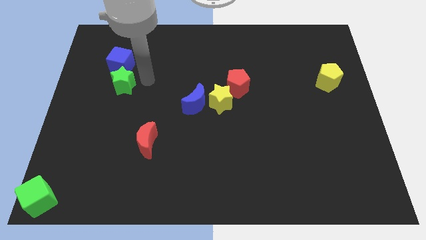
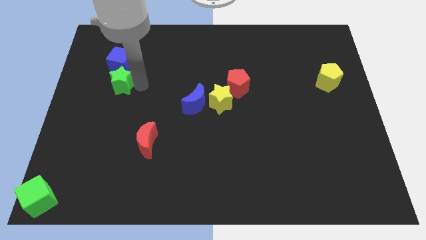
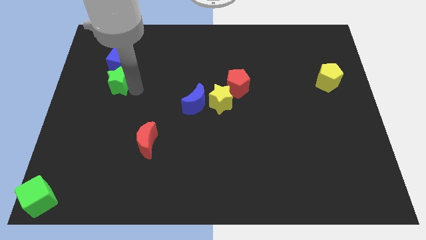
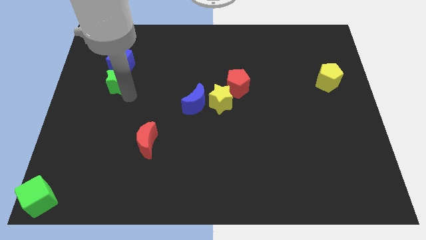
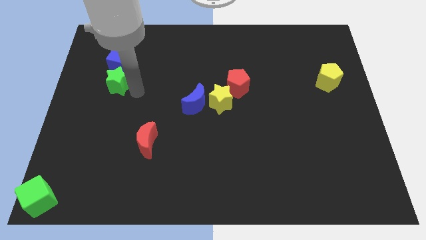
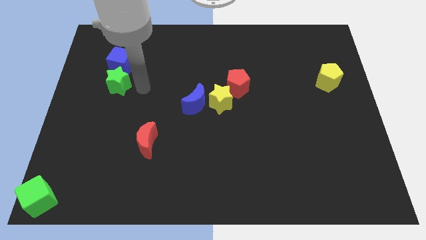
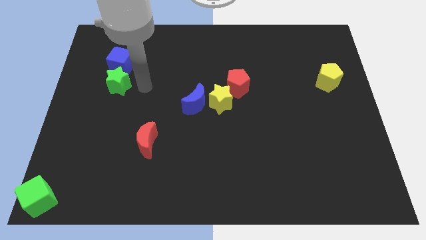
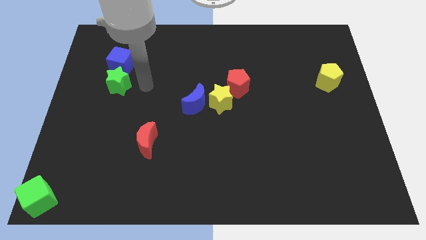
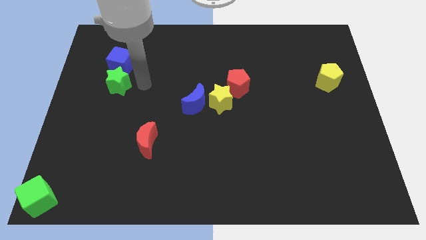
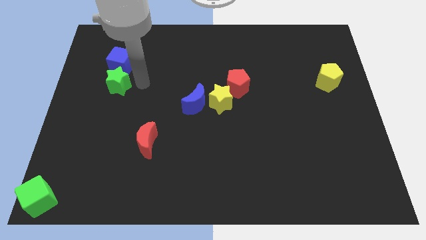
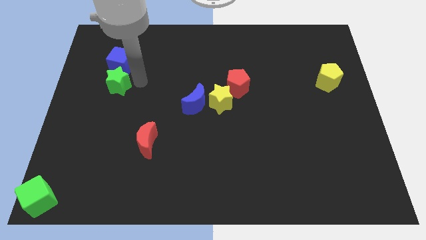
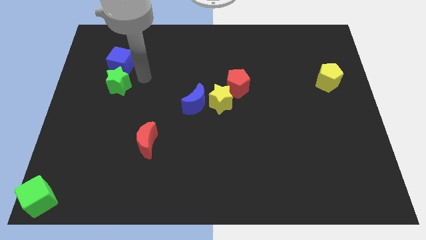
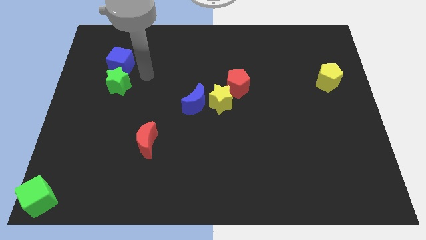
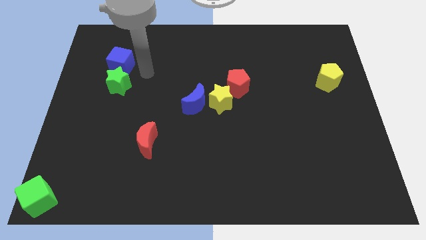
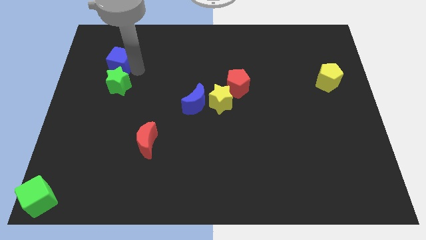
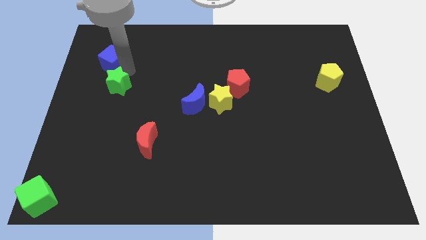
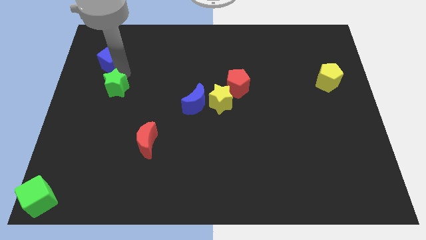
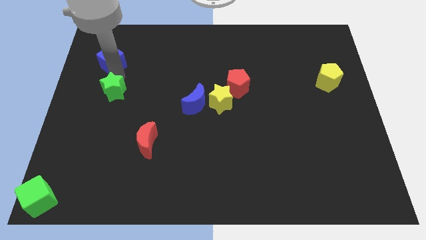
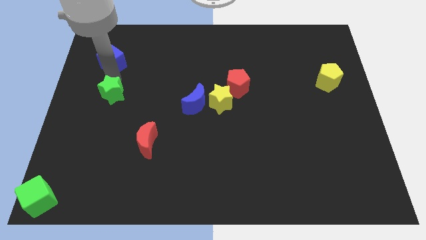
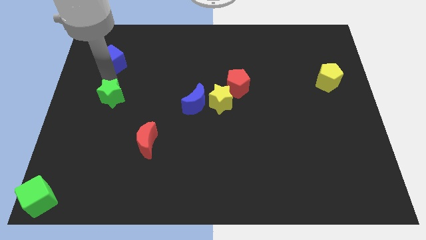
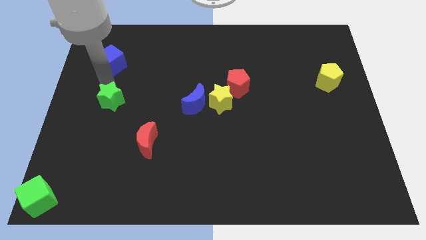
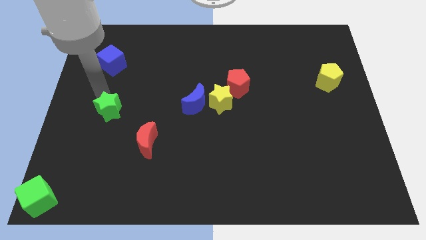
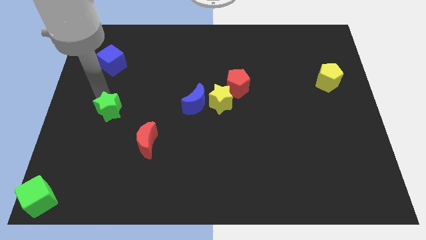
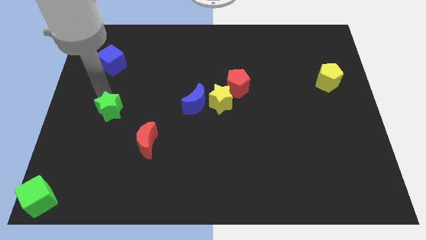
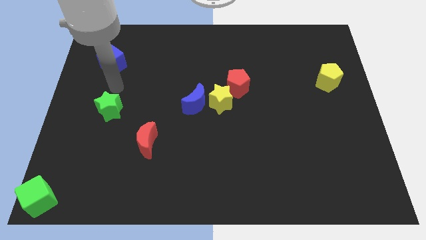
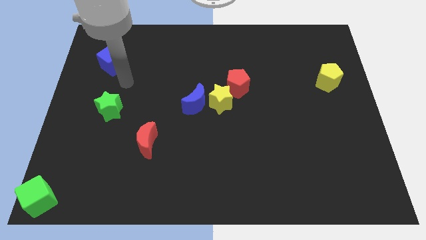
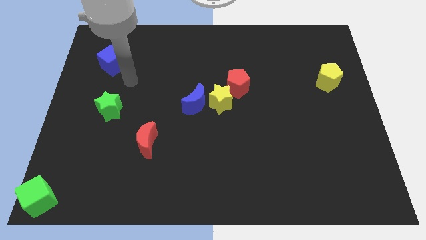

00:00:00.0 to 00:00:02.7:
move the blue cube to the left of the board

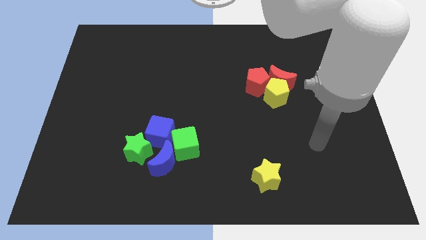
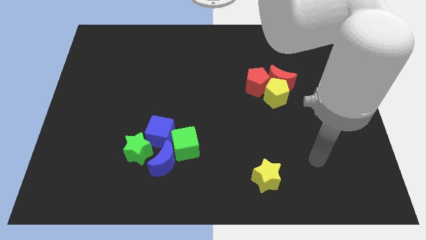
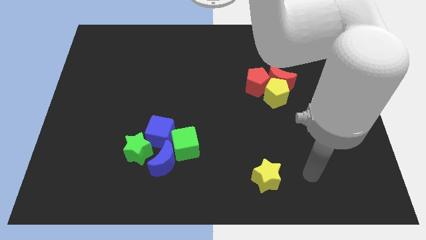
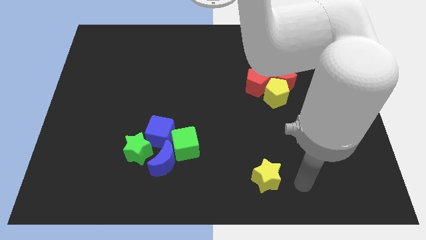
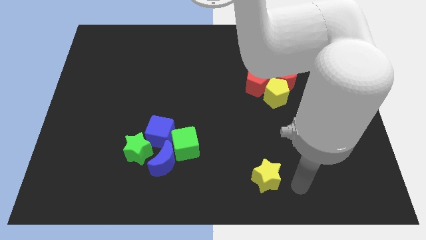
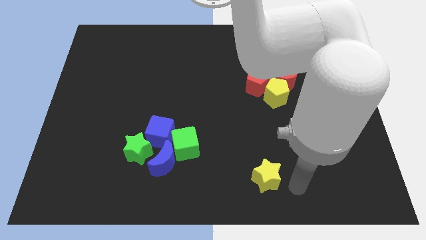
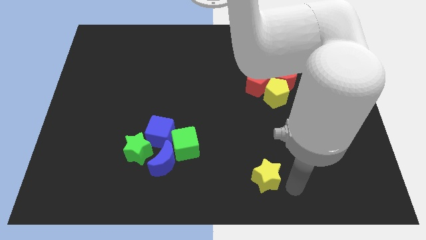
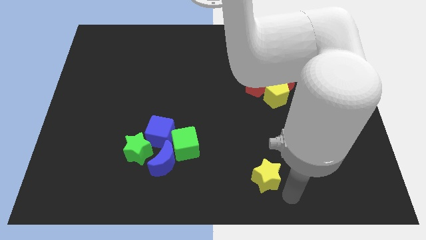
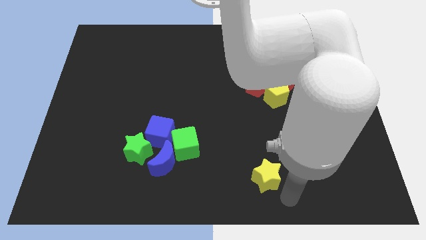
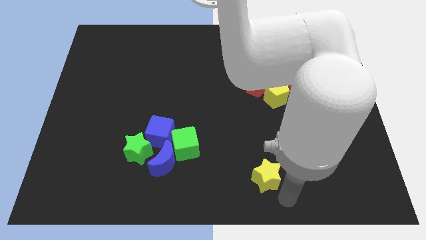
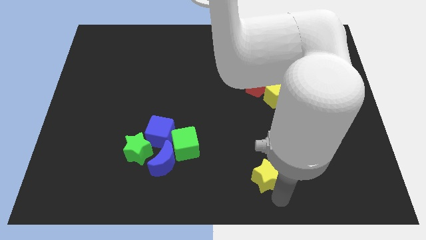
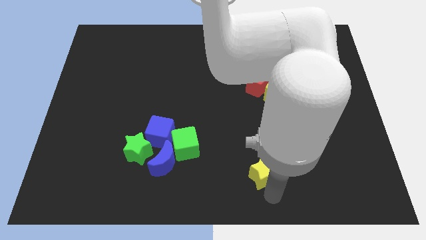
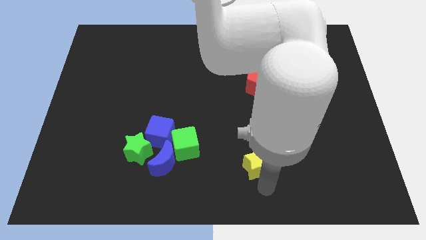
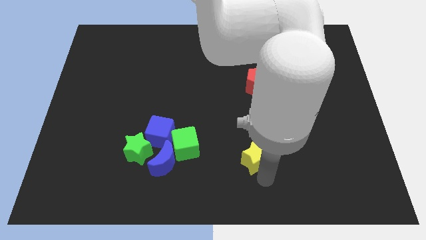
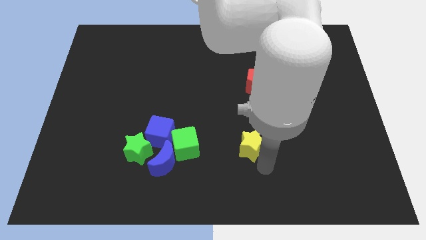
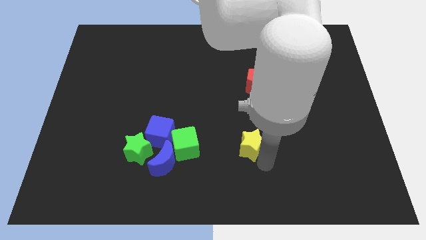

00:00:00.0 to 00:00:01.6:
push the yellow star slightly towards top of the board

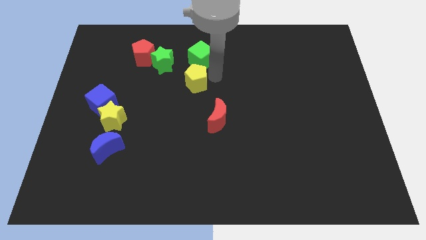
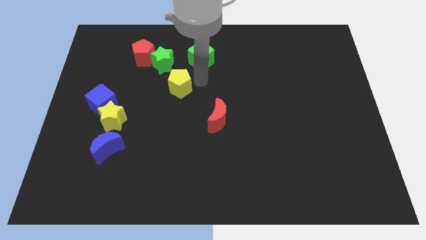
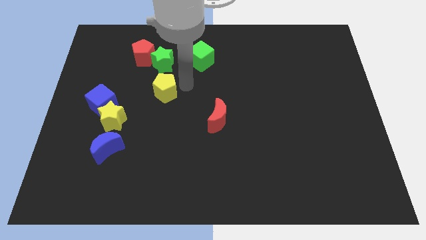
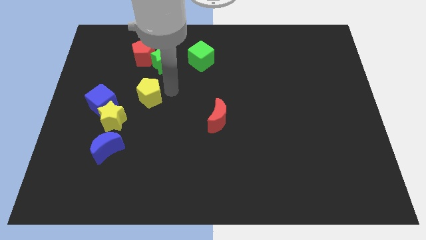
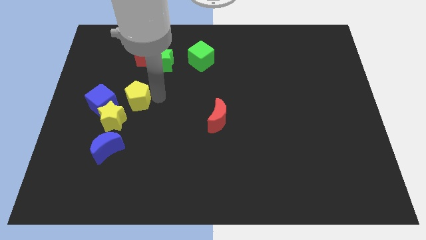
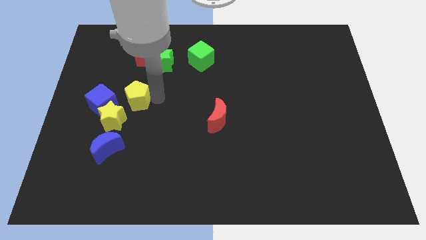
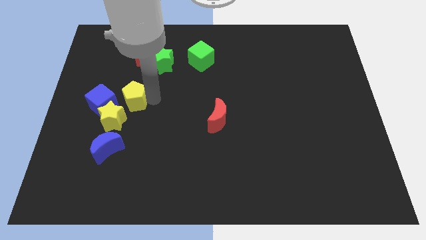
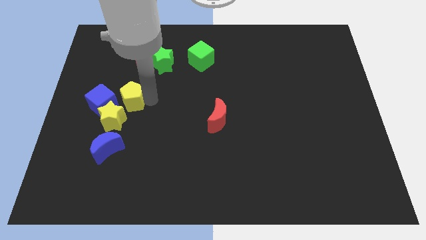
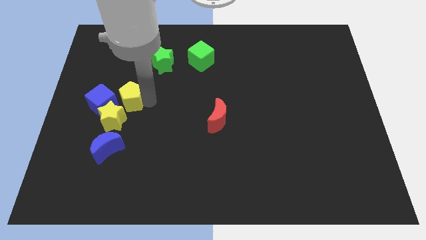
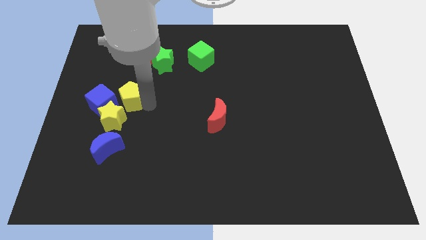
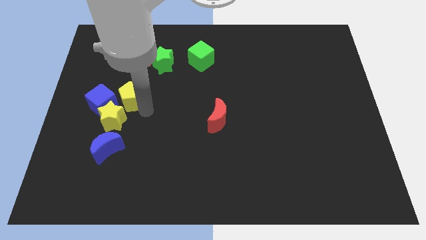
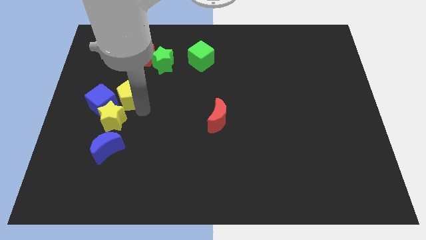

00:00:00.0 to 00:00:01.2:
push the yellow pentagon parallel to the top of the yellow star

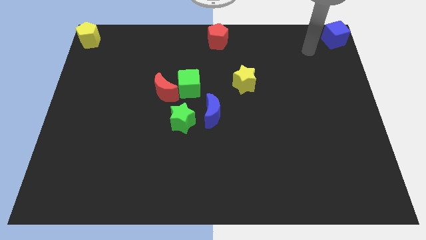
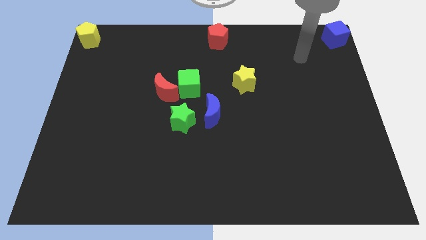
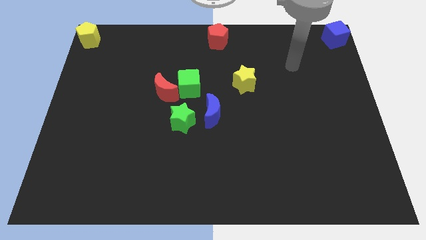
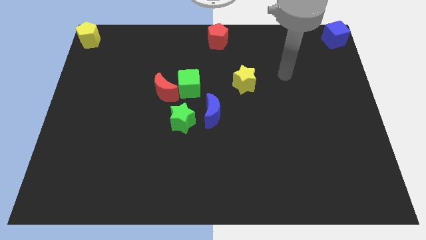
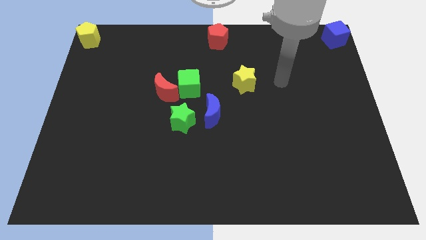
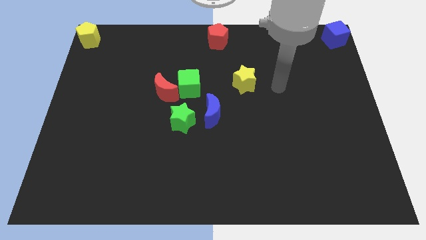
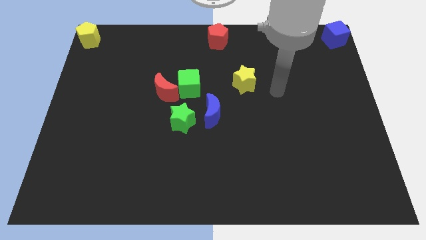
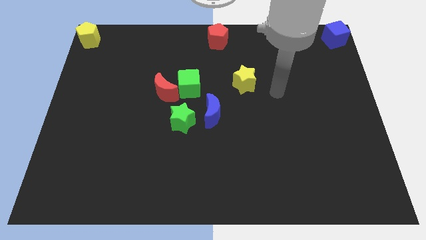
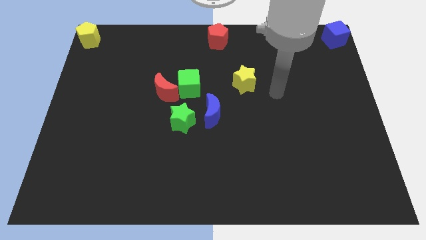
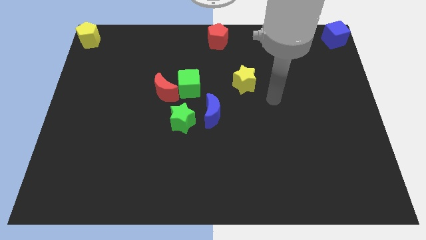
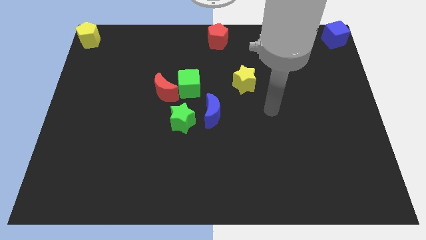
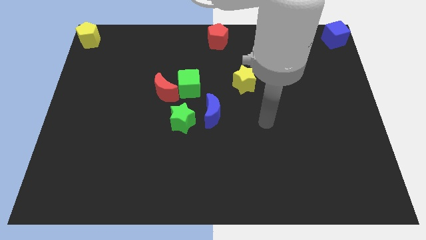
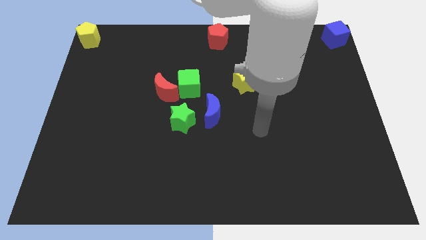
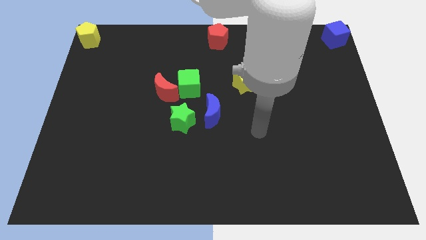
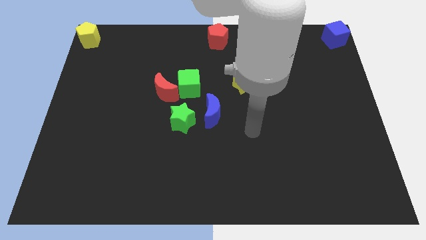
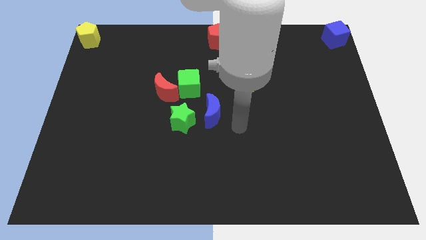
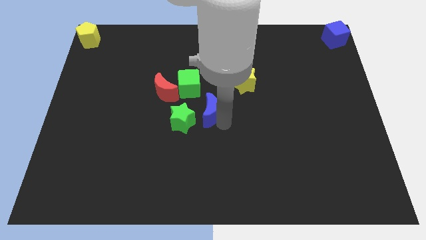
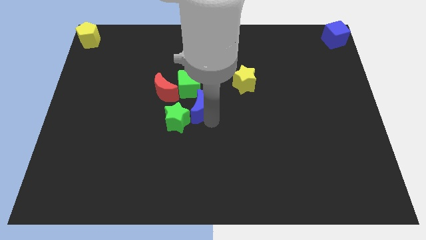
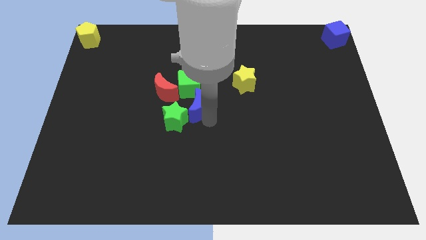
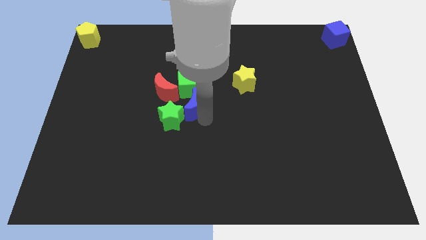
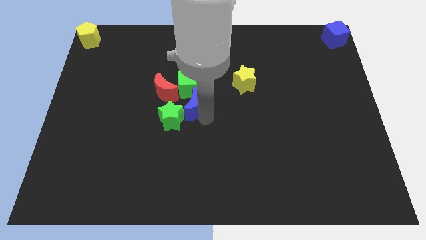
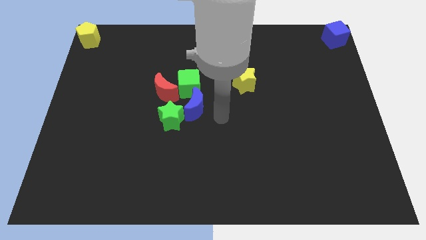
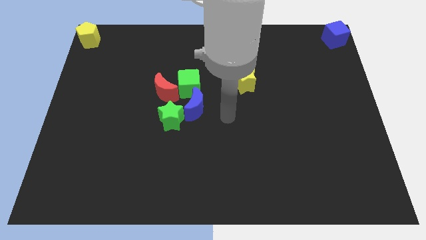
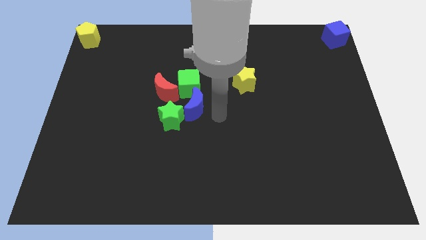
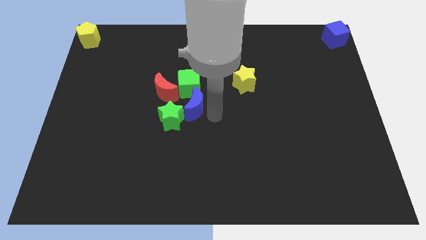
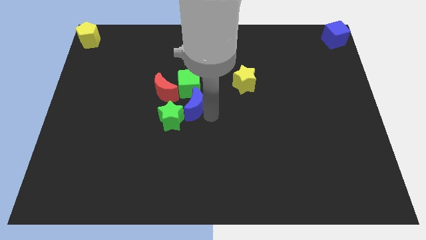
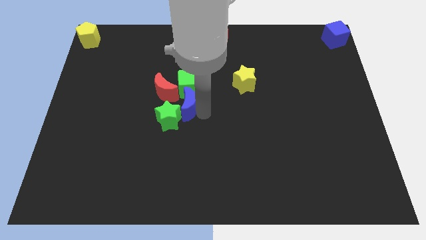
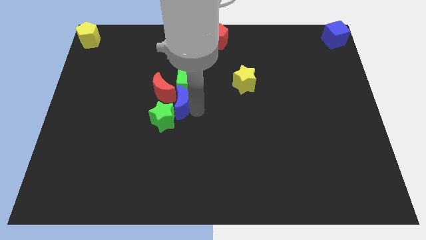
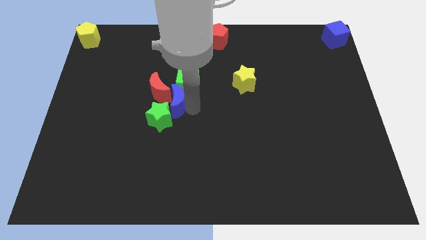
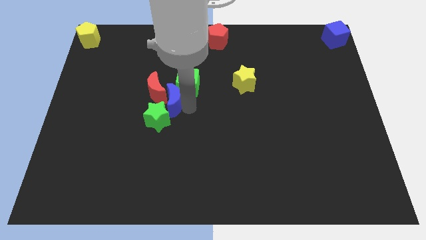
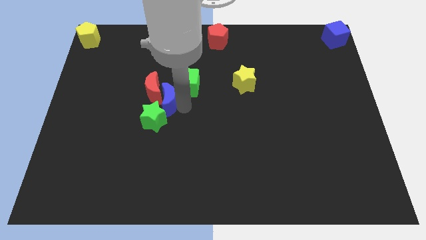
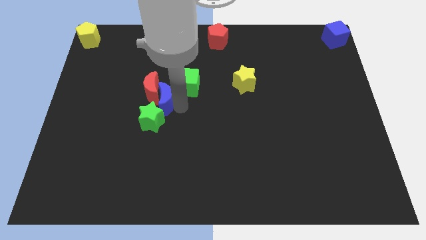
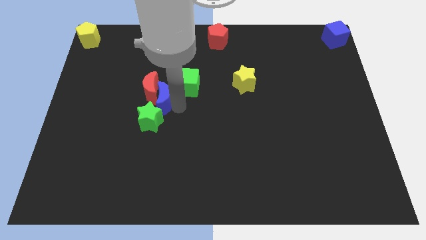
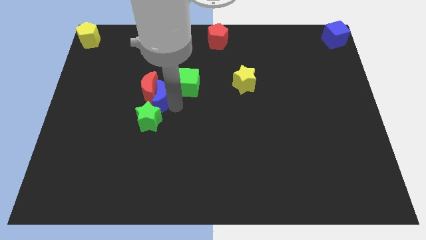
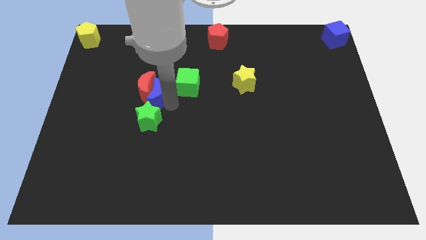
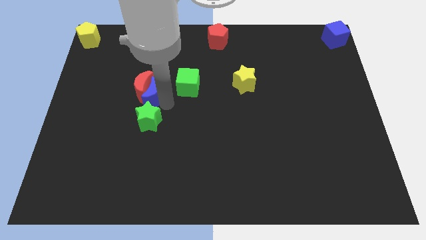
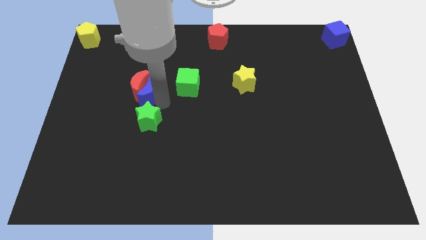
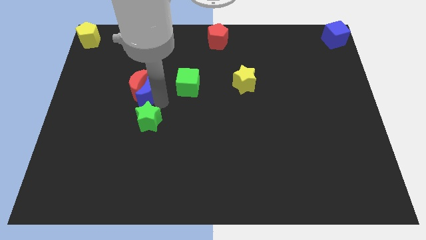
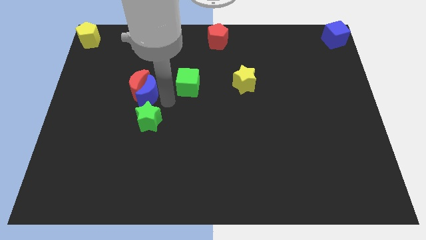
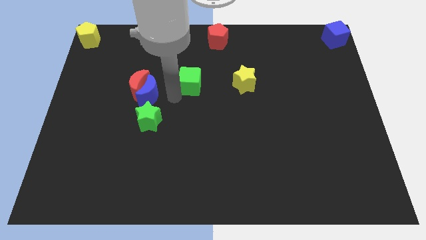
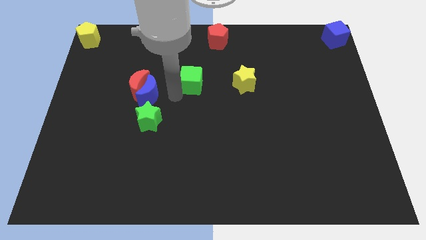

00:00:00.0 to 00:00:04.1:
move blue moon into red moon
